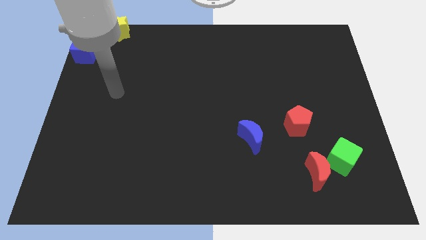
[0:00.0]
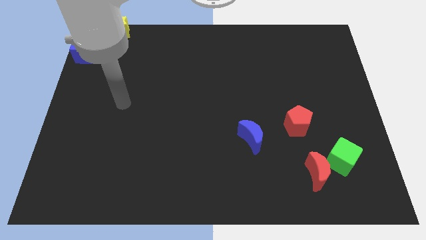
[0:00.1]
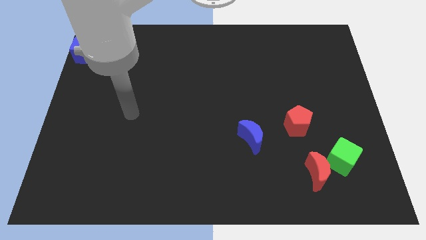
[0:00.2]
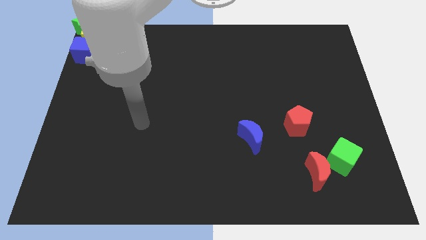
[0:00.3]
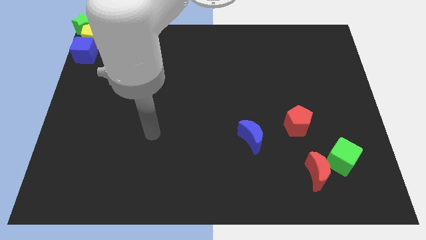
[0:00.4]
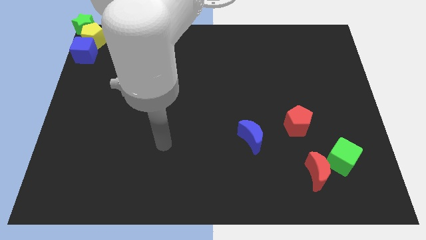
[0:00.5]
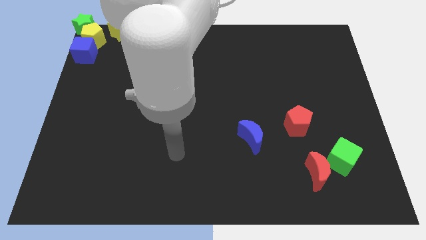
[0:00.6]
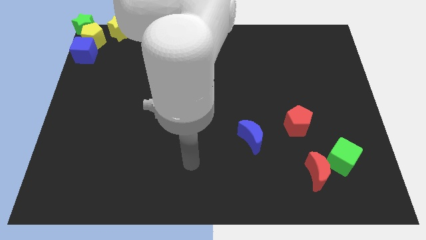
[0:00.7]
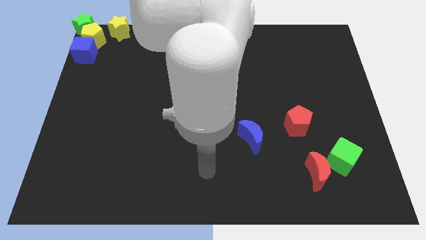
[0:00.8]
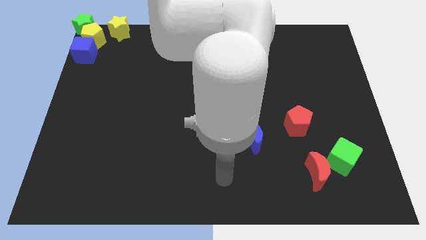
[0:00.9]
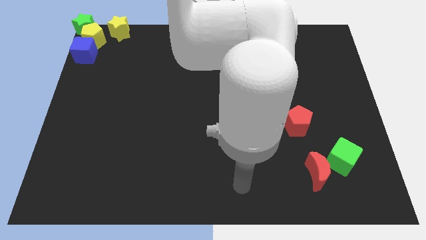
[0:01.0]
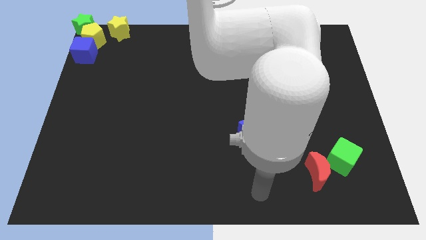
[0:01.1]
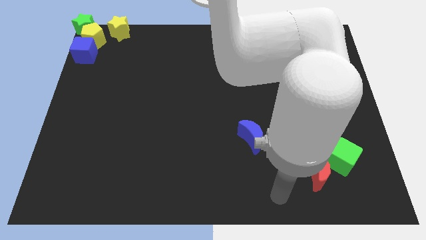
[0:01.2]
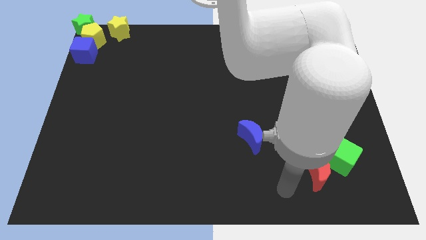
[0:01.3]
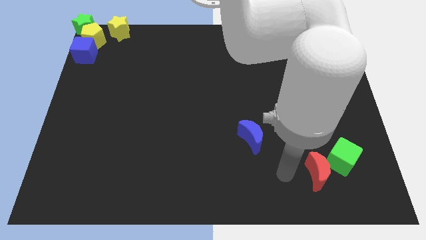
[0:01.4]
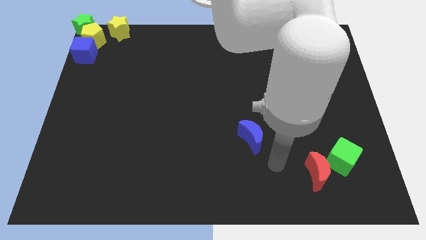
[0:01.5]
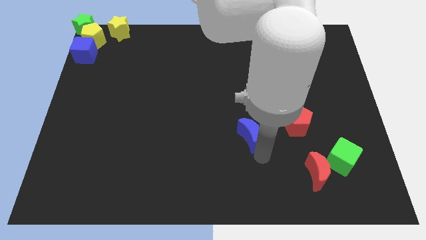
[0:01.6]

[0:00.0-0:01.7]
move your arm towards the blue crescent

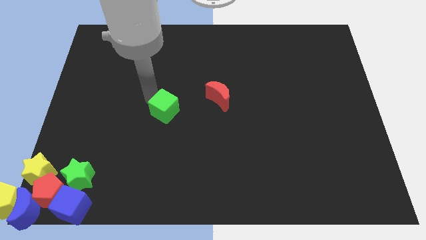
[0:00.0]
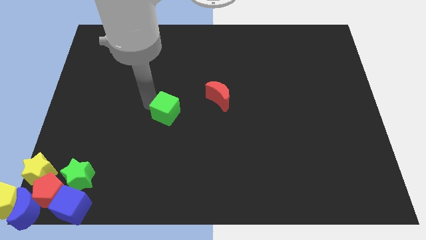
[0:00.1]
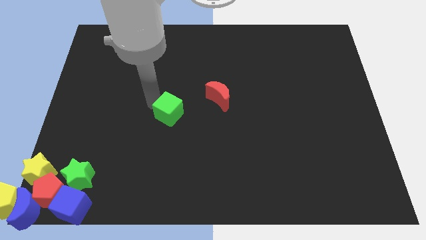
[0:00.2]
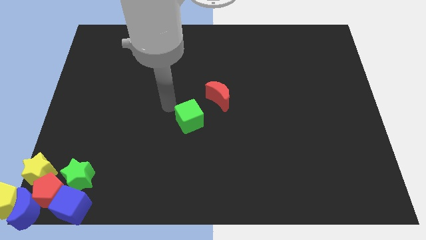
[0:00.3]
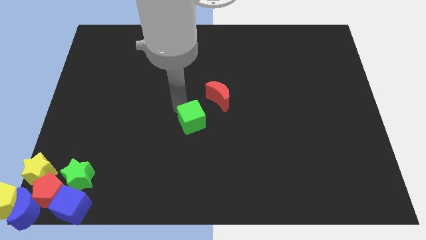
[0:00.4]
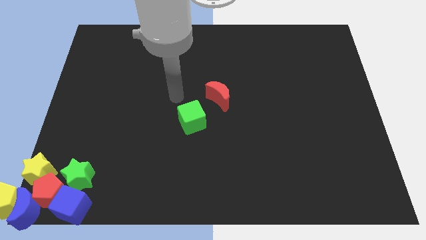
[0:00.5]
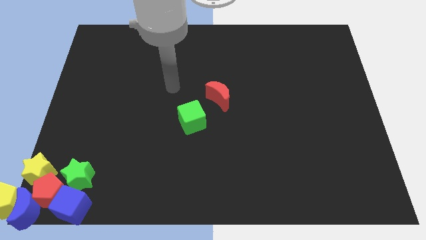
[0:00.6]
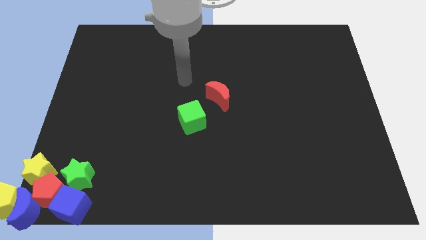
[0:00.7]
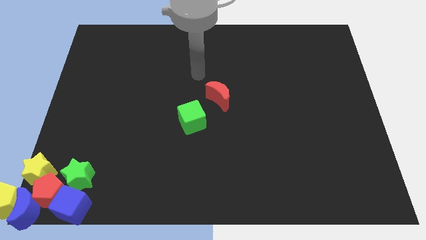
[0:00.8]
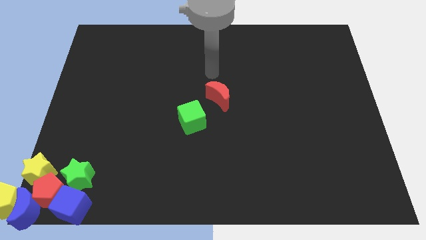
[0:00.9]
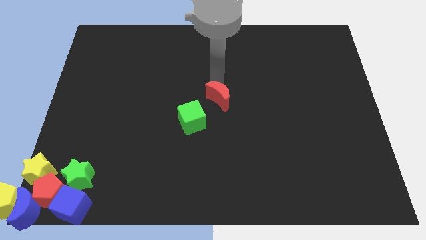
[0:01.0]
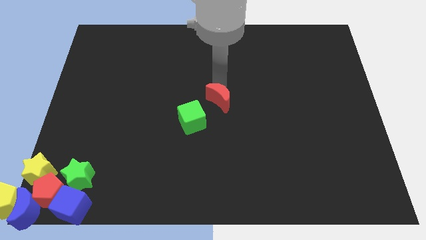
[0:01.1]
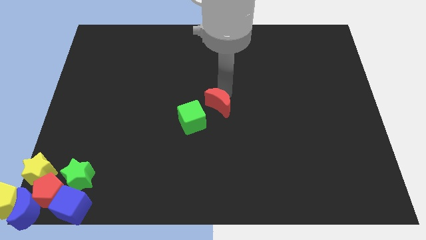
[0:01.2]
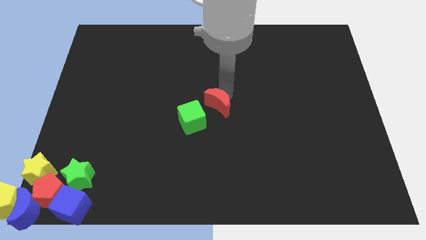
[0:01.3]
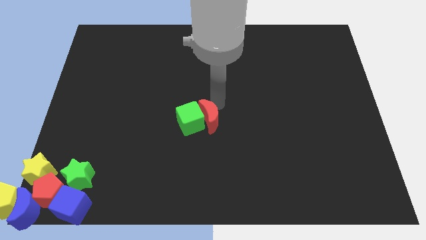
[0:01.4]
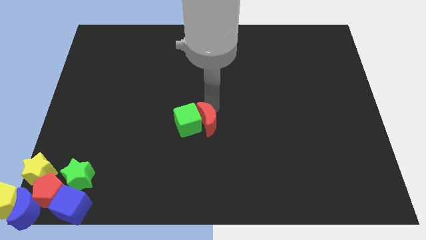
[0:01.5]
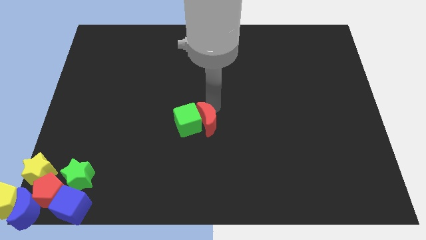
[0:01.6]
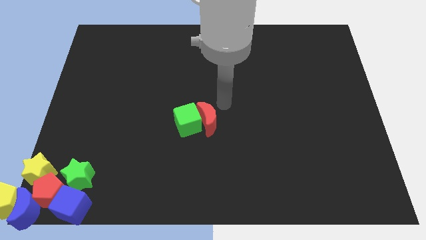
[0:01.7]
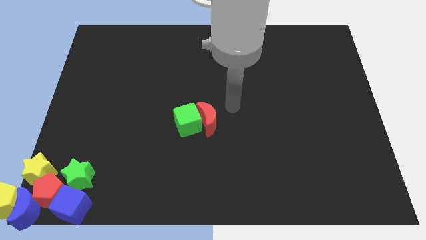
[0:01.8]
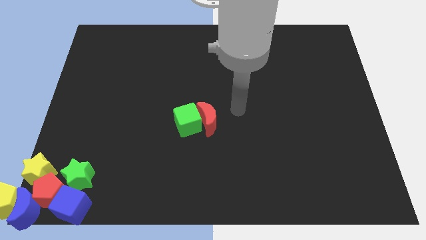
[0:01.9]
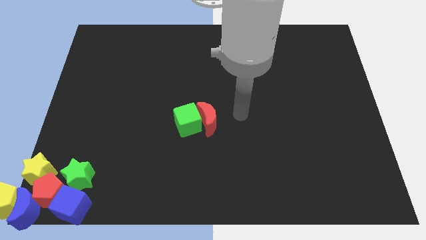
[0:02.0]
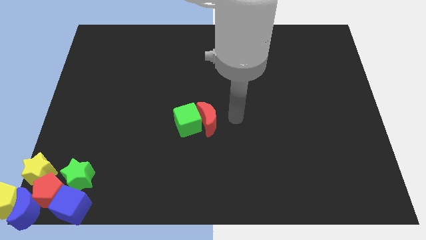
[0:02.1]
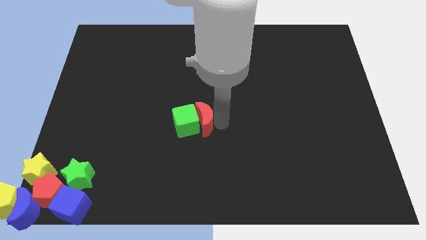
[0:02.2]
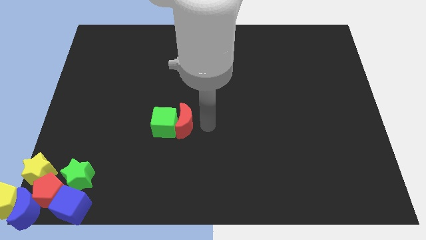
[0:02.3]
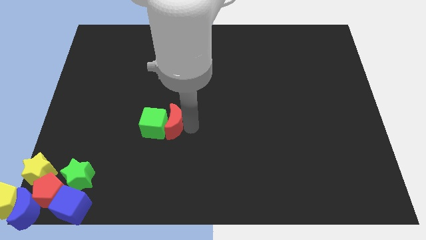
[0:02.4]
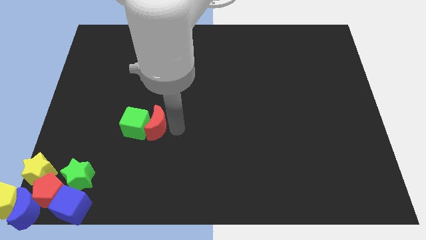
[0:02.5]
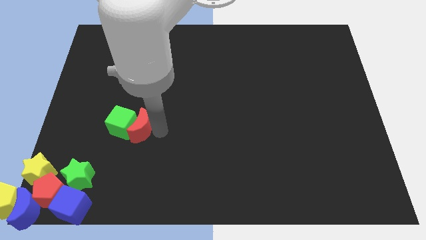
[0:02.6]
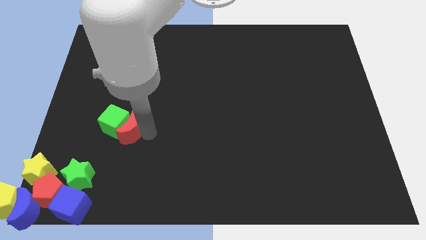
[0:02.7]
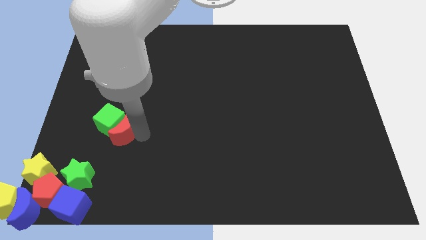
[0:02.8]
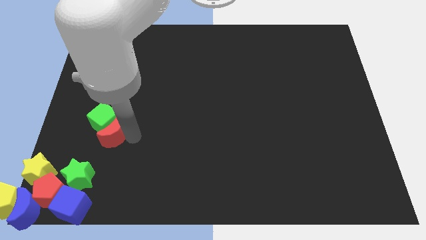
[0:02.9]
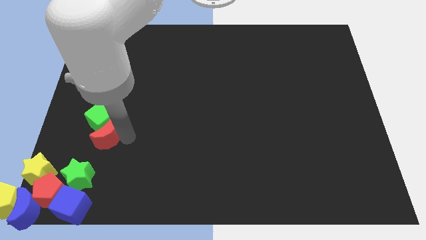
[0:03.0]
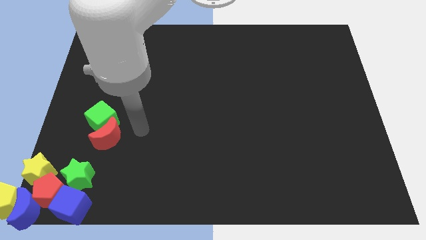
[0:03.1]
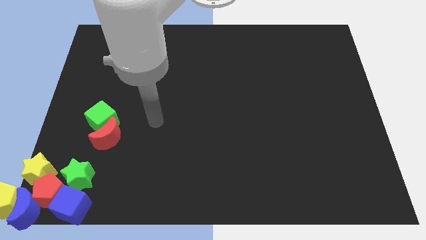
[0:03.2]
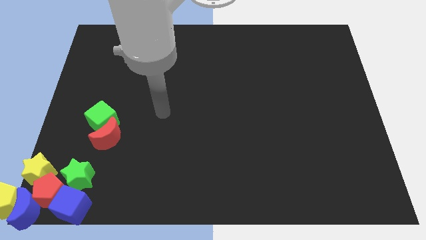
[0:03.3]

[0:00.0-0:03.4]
push the green cube with the red crescent towards the bottom left of the board

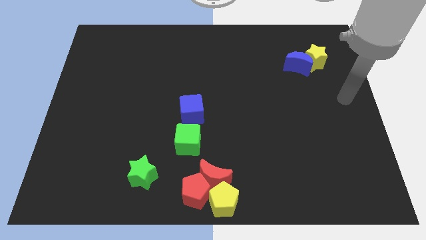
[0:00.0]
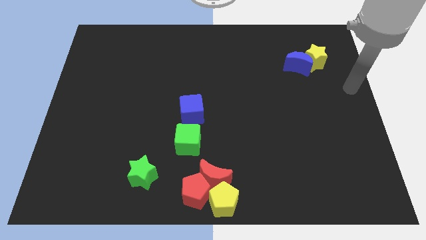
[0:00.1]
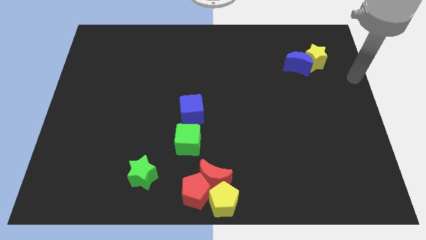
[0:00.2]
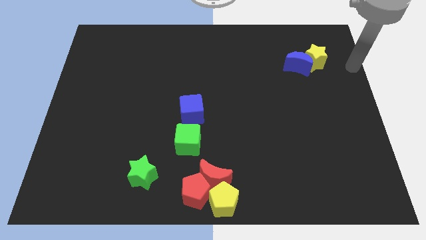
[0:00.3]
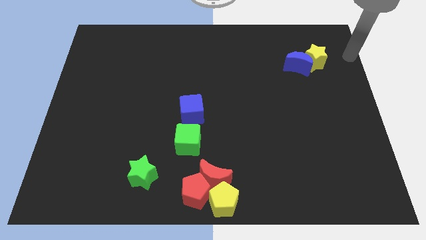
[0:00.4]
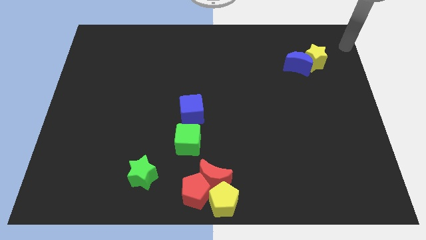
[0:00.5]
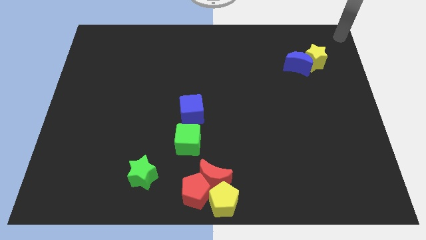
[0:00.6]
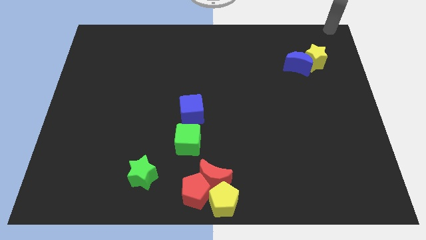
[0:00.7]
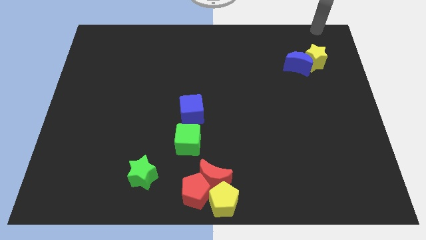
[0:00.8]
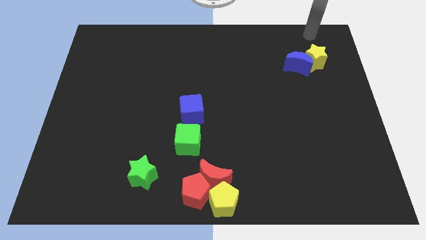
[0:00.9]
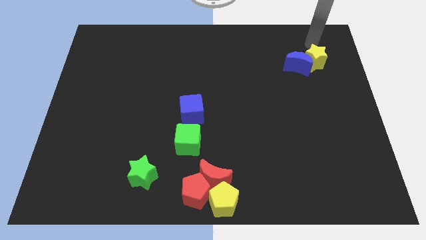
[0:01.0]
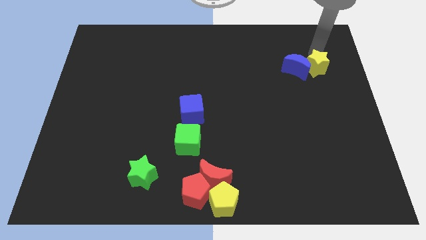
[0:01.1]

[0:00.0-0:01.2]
point your arm at the top of yellow star

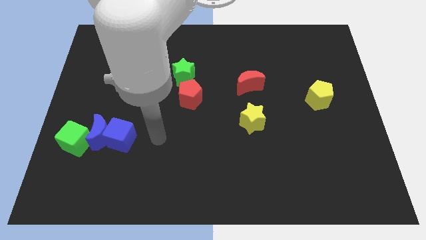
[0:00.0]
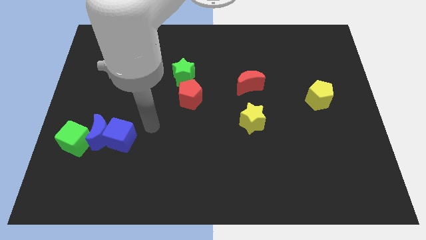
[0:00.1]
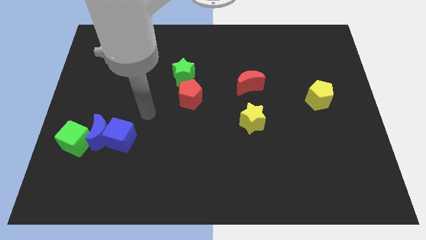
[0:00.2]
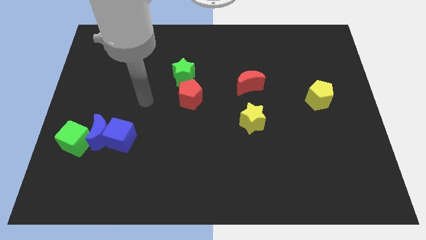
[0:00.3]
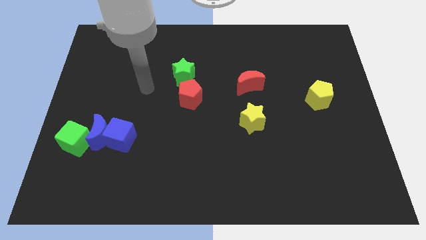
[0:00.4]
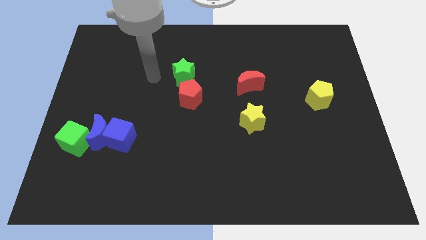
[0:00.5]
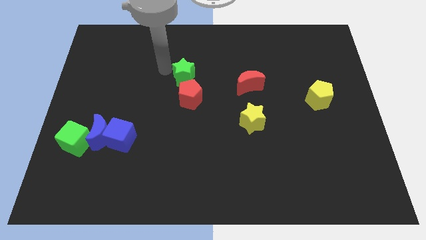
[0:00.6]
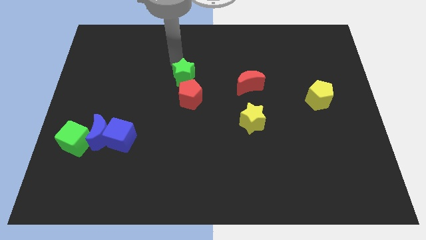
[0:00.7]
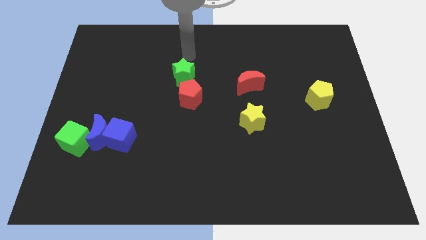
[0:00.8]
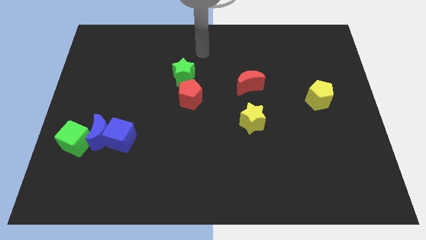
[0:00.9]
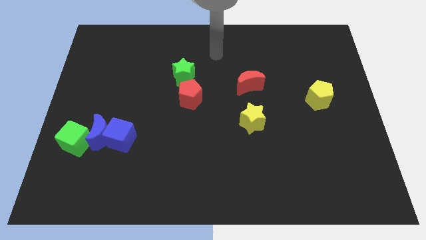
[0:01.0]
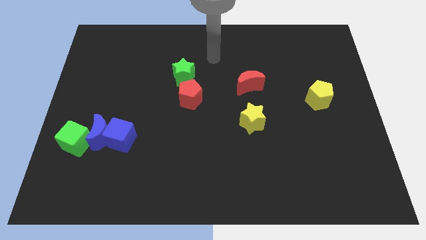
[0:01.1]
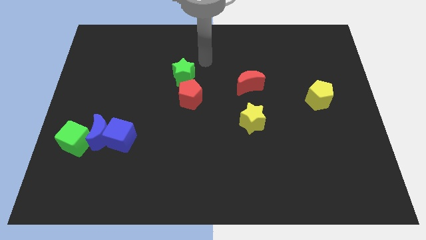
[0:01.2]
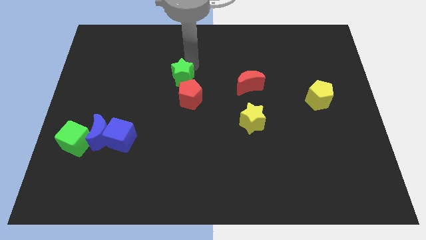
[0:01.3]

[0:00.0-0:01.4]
move your arm towards the green star

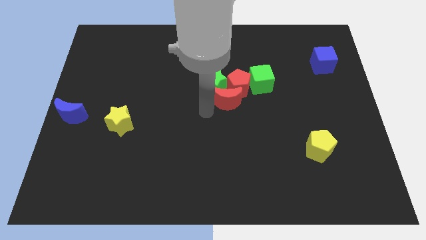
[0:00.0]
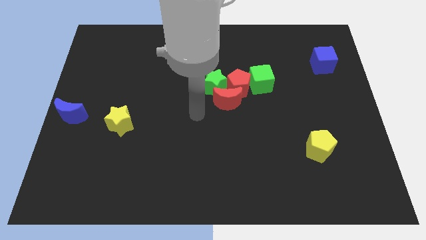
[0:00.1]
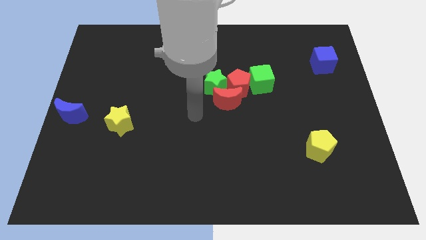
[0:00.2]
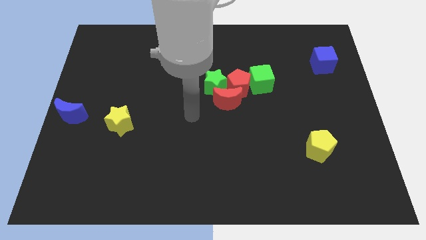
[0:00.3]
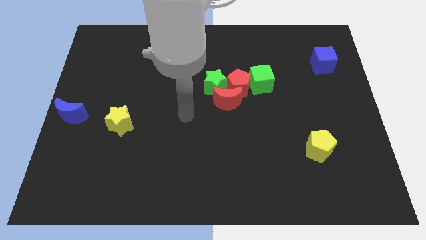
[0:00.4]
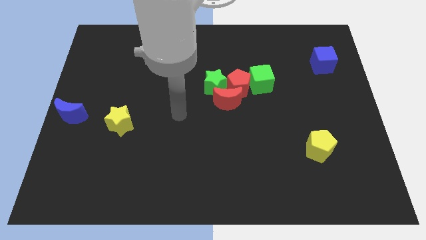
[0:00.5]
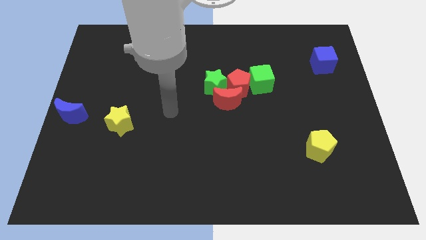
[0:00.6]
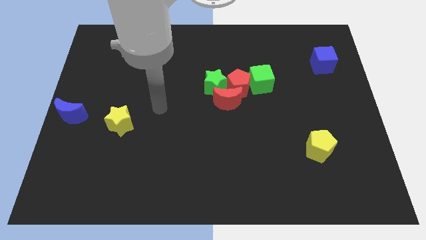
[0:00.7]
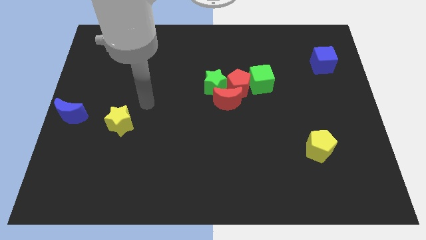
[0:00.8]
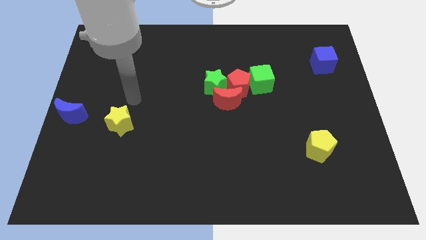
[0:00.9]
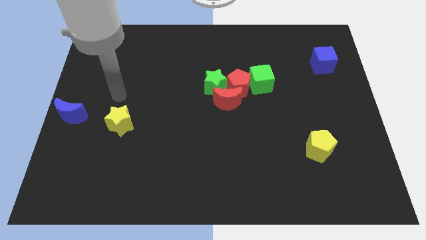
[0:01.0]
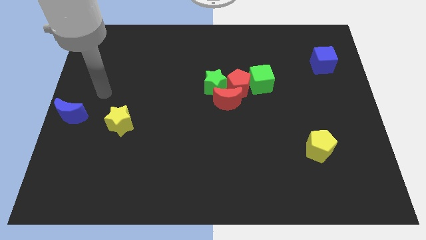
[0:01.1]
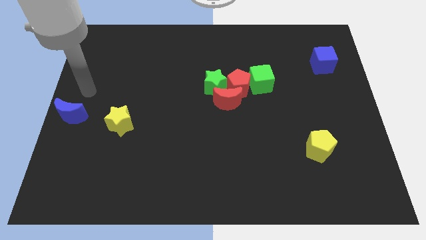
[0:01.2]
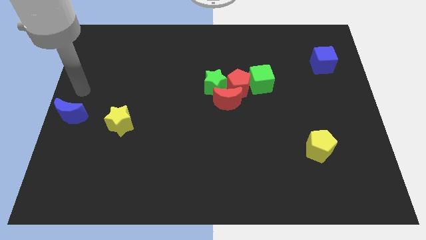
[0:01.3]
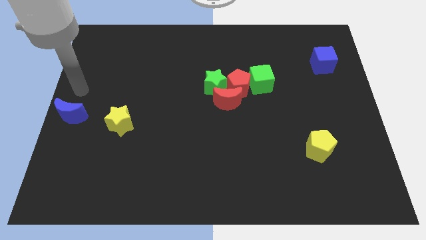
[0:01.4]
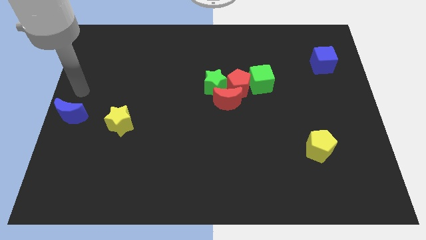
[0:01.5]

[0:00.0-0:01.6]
move your arm away from the red moon
